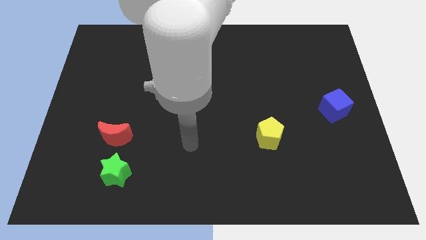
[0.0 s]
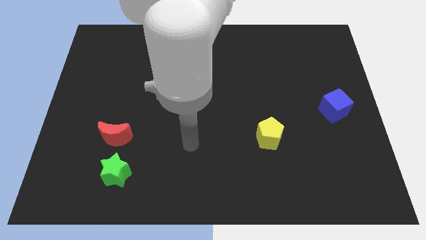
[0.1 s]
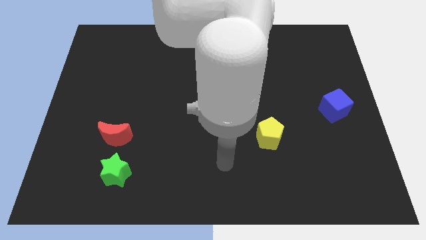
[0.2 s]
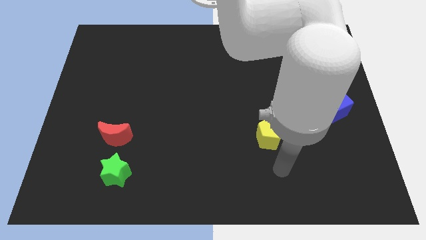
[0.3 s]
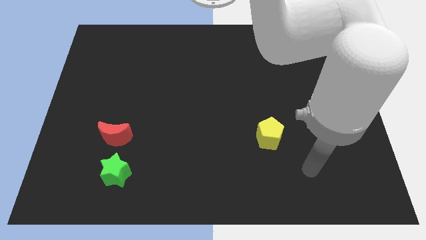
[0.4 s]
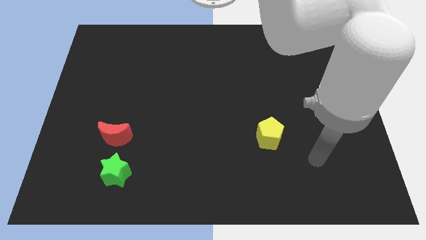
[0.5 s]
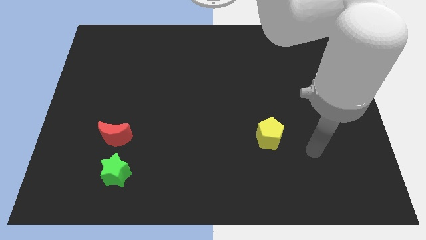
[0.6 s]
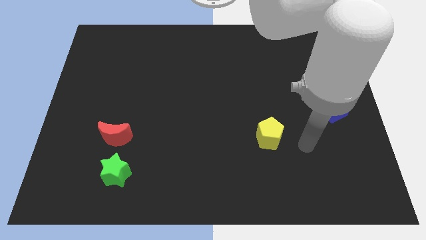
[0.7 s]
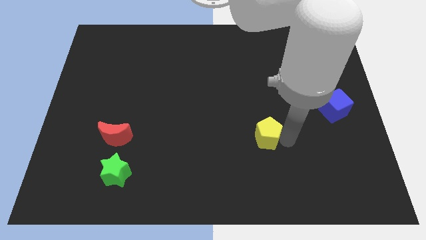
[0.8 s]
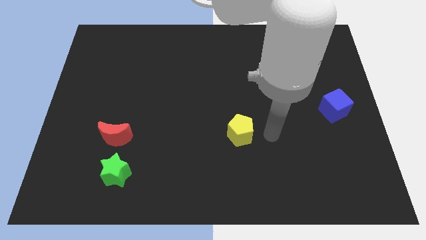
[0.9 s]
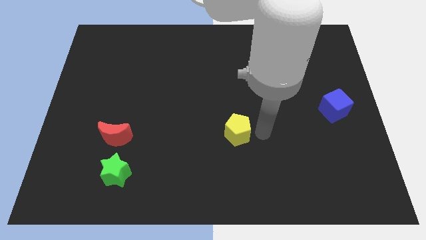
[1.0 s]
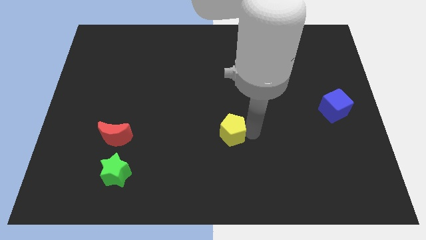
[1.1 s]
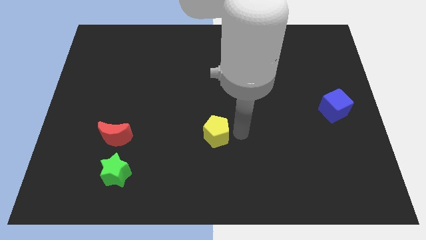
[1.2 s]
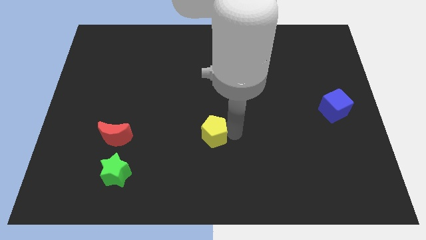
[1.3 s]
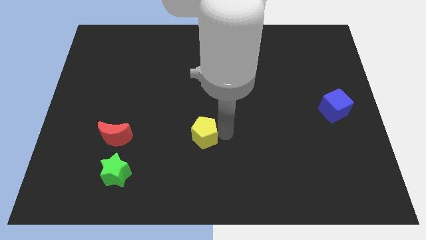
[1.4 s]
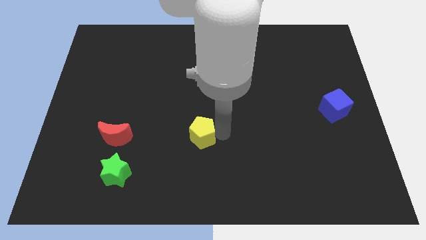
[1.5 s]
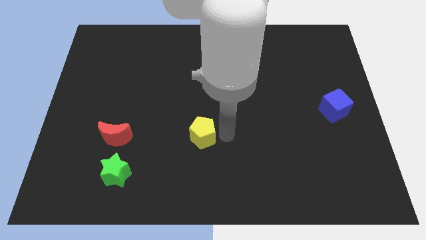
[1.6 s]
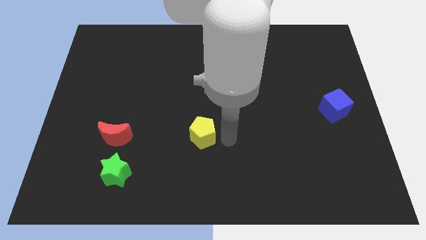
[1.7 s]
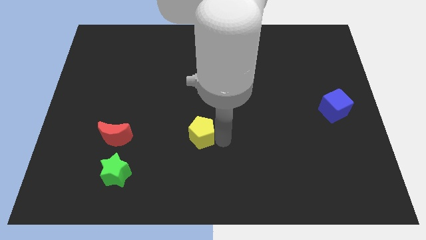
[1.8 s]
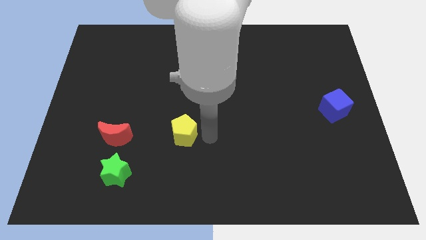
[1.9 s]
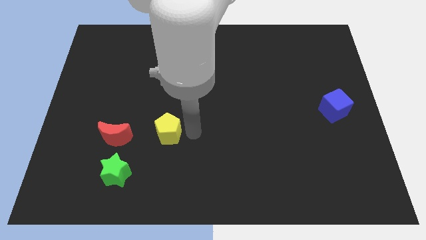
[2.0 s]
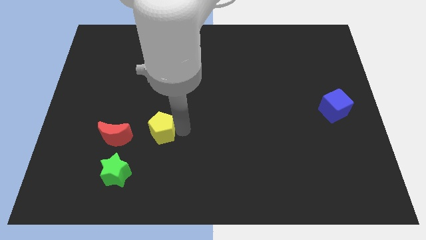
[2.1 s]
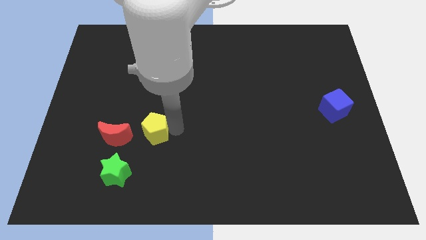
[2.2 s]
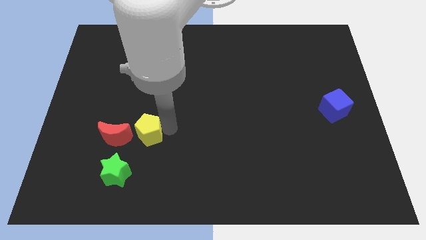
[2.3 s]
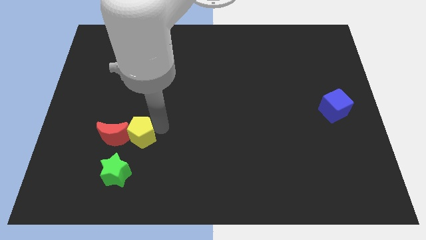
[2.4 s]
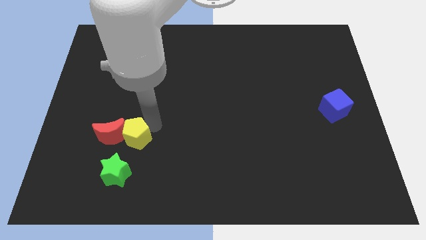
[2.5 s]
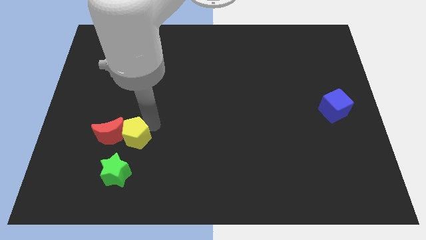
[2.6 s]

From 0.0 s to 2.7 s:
put the yellow block next to the red moon

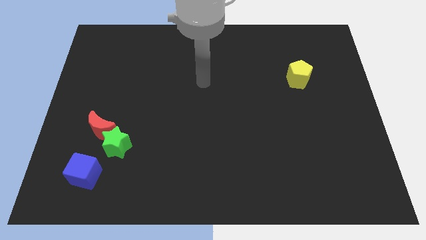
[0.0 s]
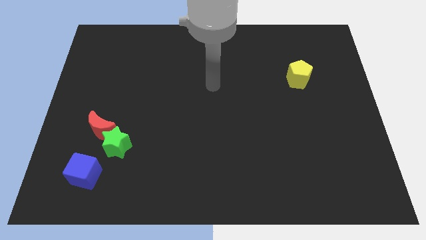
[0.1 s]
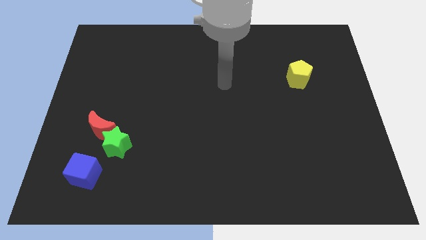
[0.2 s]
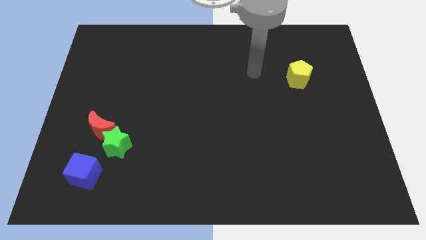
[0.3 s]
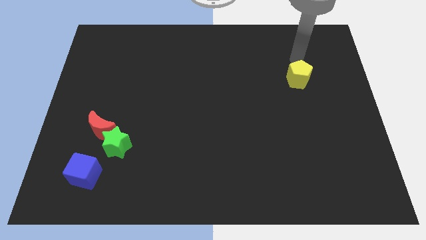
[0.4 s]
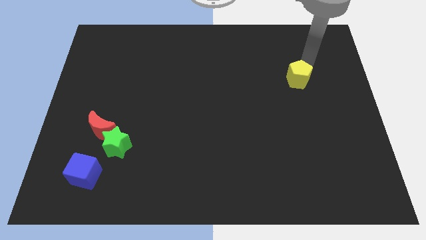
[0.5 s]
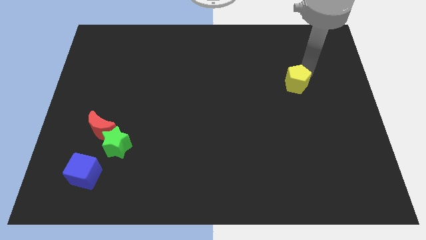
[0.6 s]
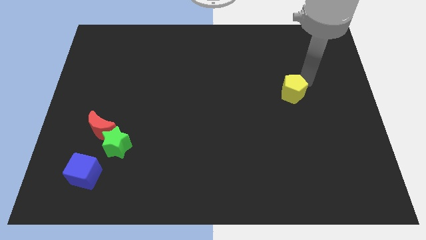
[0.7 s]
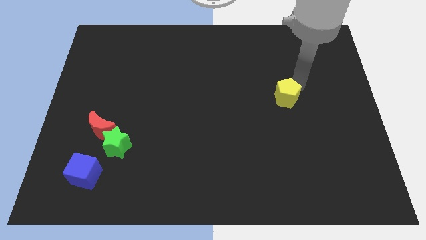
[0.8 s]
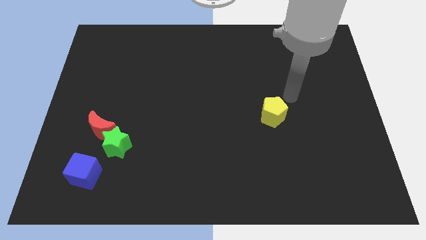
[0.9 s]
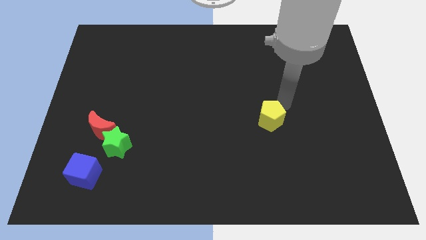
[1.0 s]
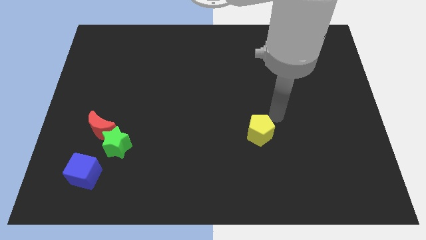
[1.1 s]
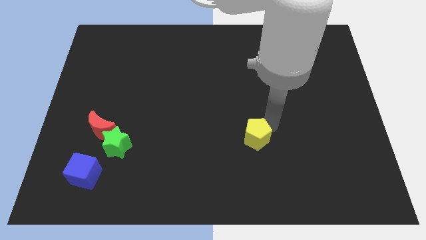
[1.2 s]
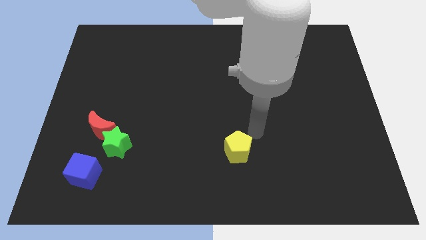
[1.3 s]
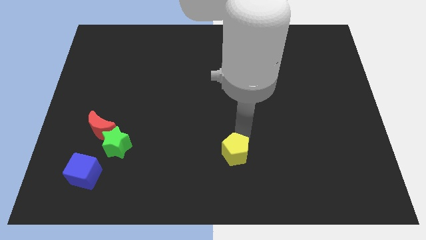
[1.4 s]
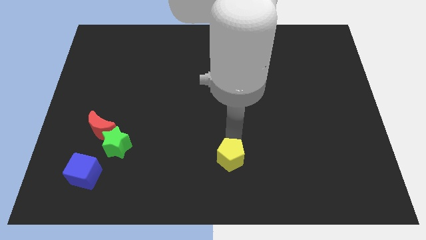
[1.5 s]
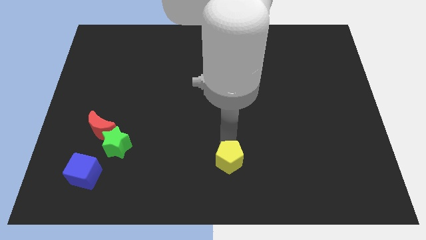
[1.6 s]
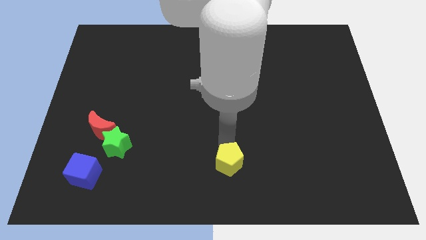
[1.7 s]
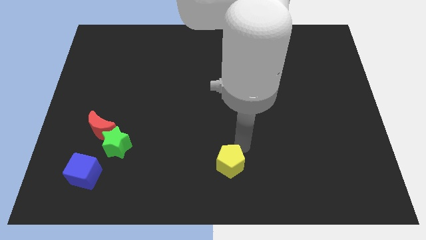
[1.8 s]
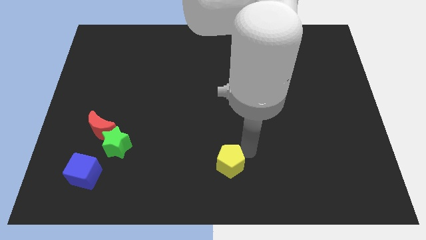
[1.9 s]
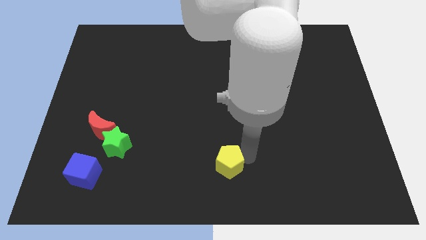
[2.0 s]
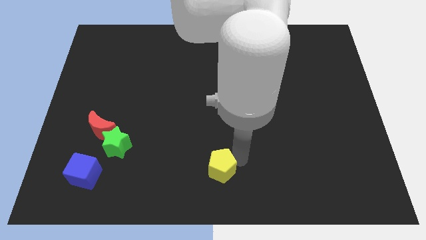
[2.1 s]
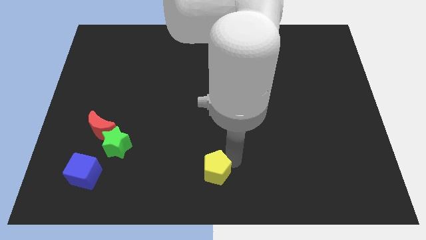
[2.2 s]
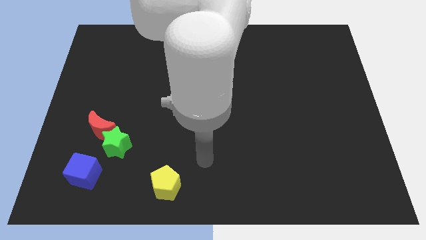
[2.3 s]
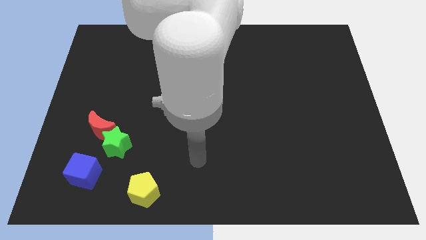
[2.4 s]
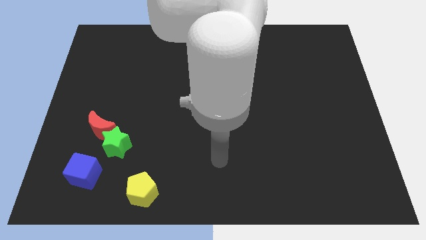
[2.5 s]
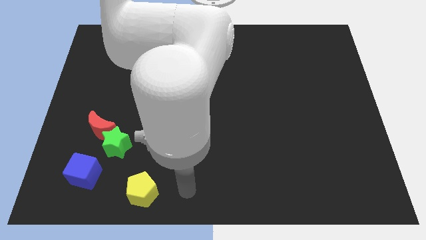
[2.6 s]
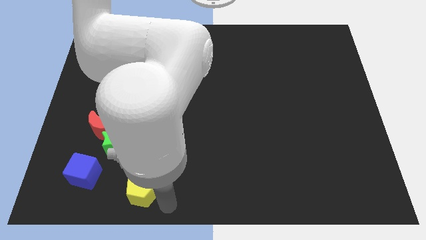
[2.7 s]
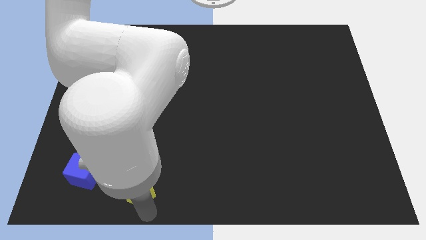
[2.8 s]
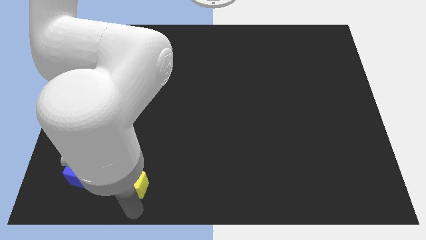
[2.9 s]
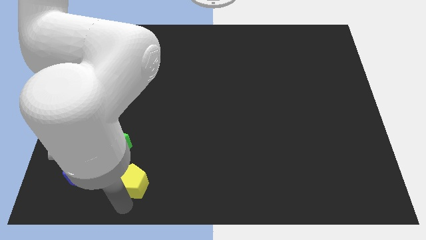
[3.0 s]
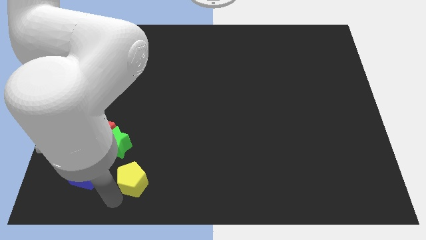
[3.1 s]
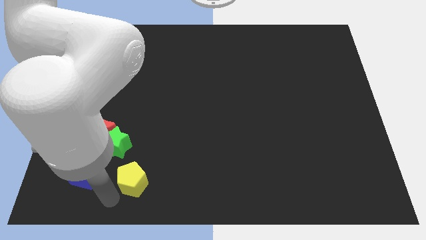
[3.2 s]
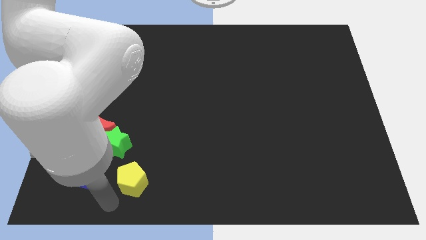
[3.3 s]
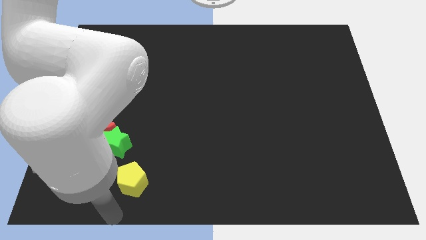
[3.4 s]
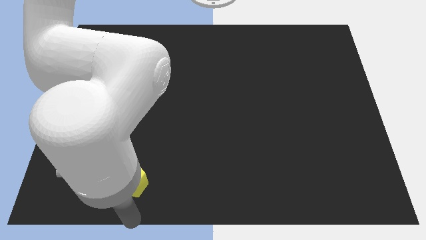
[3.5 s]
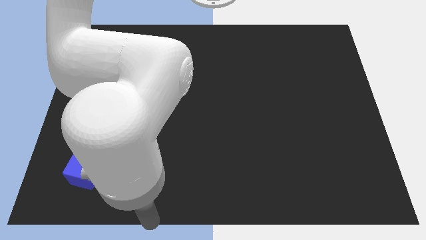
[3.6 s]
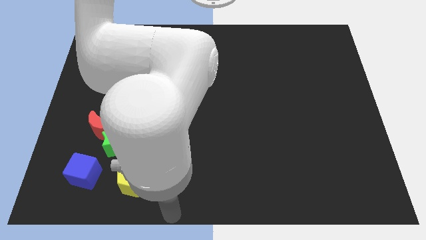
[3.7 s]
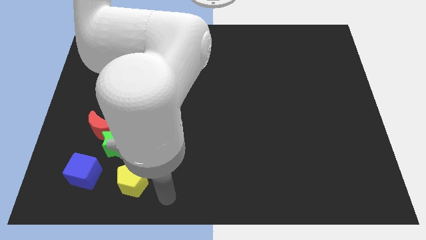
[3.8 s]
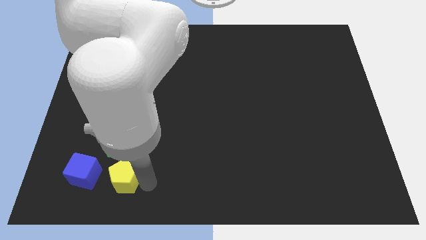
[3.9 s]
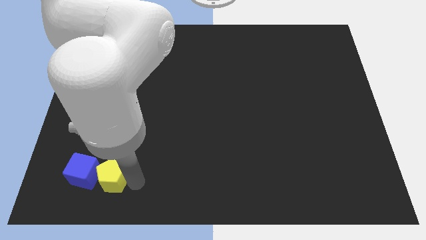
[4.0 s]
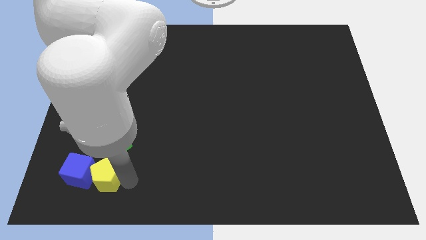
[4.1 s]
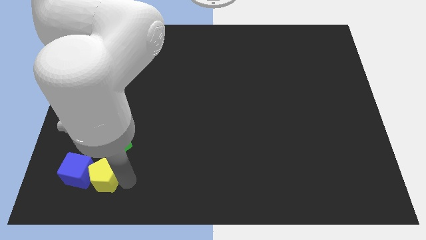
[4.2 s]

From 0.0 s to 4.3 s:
move the yellow block to the cube

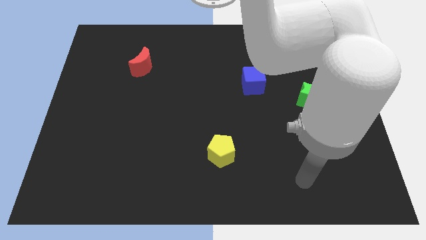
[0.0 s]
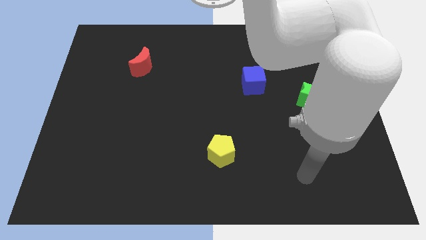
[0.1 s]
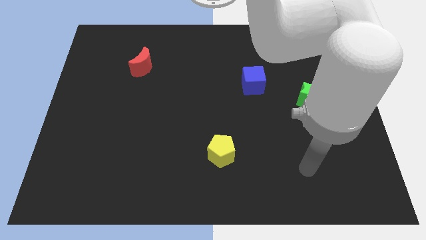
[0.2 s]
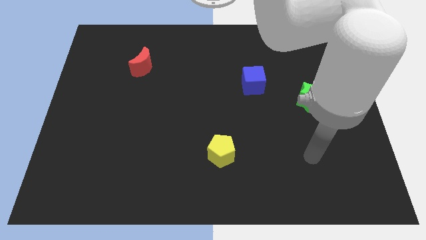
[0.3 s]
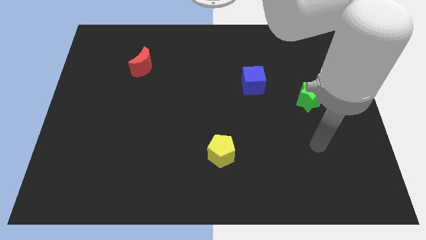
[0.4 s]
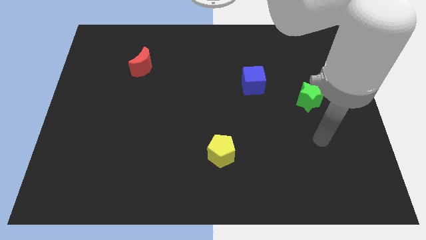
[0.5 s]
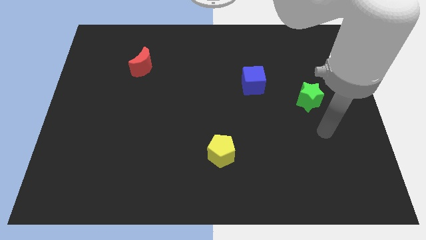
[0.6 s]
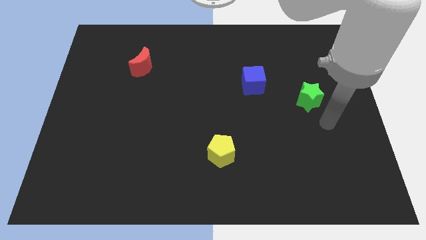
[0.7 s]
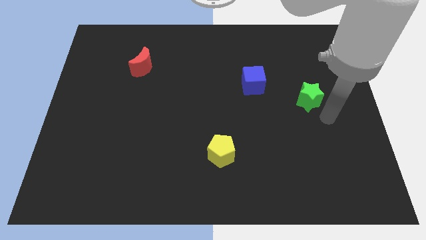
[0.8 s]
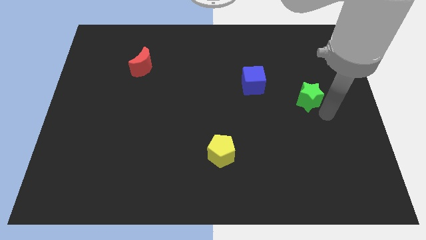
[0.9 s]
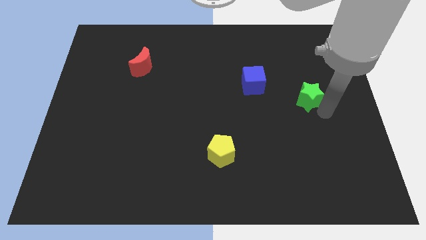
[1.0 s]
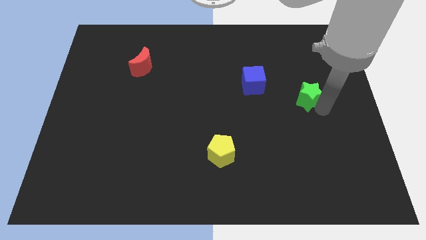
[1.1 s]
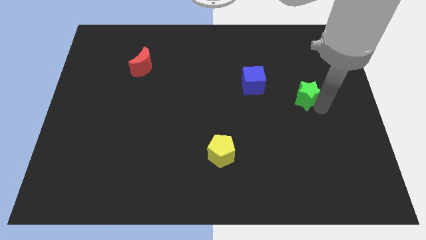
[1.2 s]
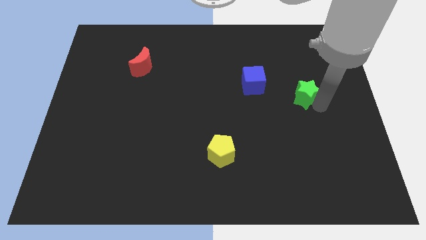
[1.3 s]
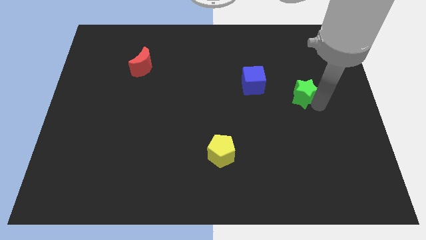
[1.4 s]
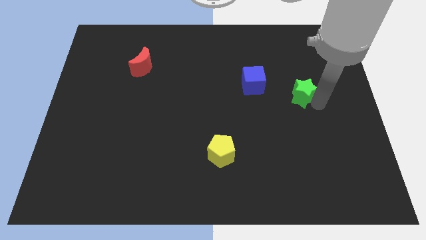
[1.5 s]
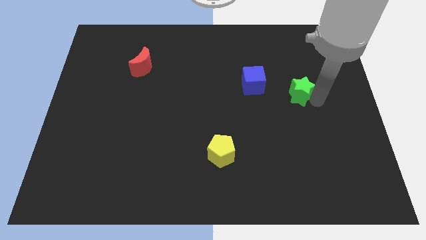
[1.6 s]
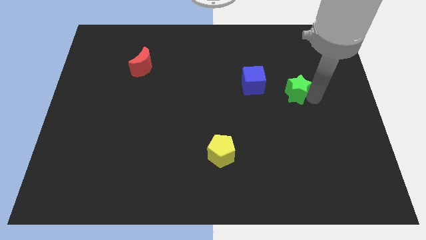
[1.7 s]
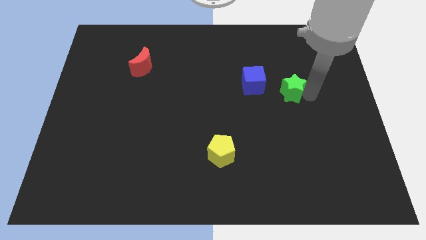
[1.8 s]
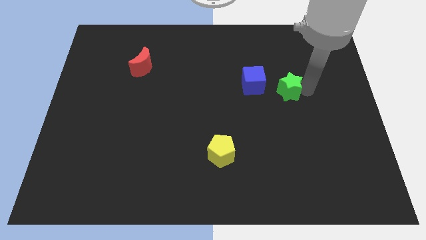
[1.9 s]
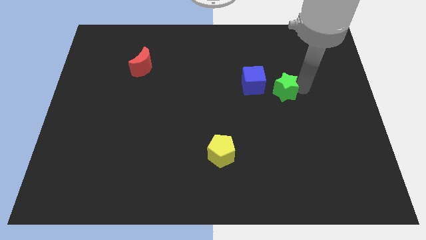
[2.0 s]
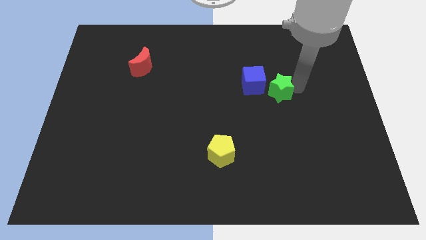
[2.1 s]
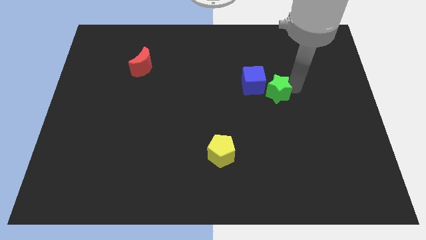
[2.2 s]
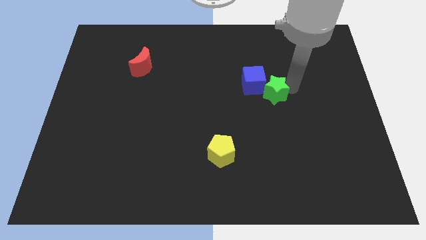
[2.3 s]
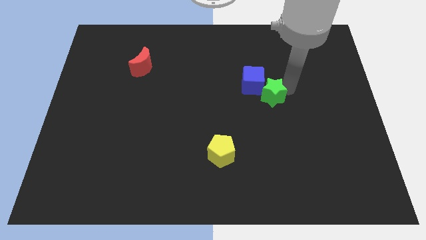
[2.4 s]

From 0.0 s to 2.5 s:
push the green block to the cube
